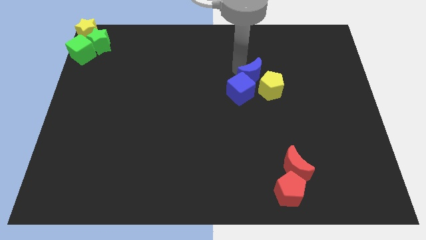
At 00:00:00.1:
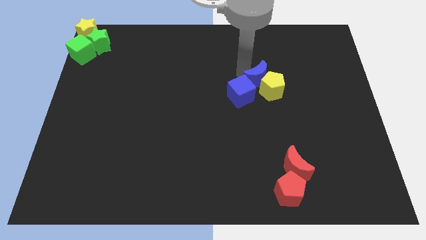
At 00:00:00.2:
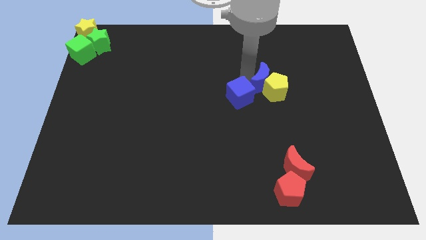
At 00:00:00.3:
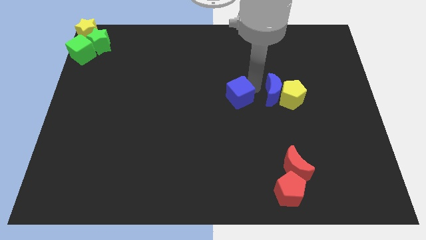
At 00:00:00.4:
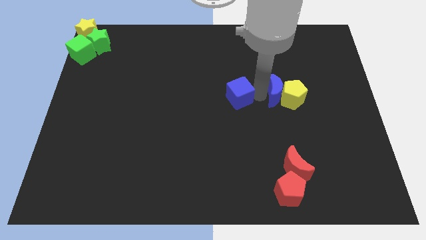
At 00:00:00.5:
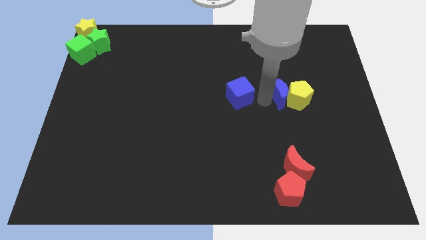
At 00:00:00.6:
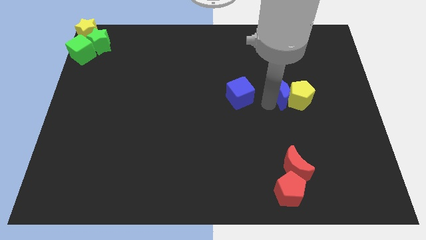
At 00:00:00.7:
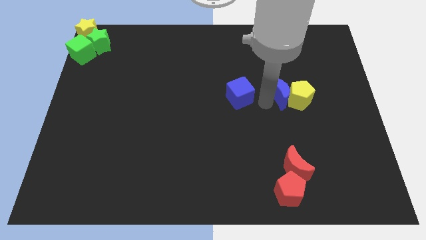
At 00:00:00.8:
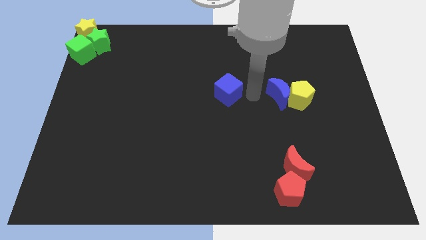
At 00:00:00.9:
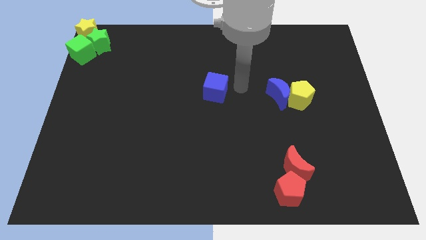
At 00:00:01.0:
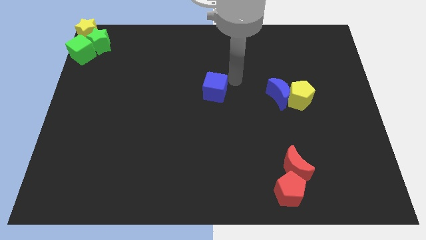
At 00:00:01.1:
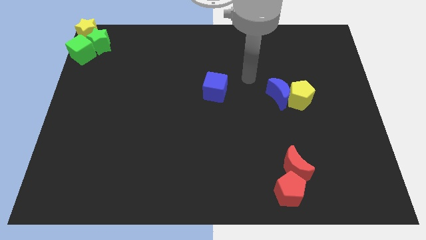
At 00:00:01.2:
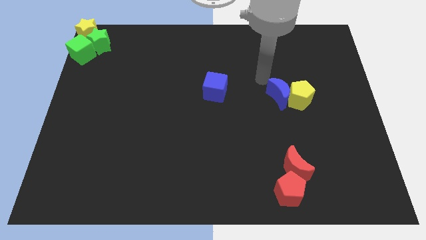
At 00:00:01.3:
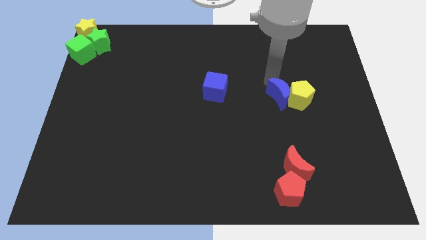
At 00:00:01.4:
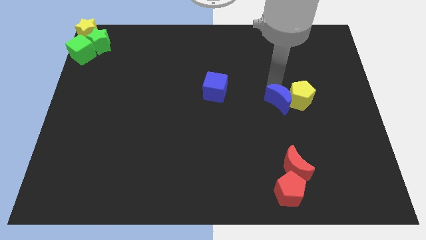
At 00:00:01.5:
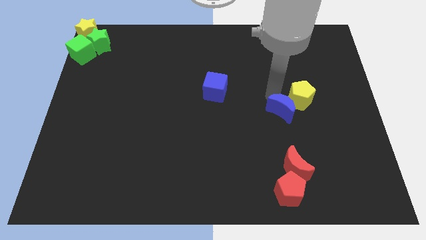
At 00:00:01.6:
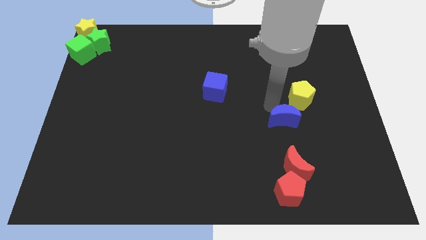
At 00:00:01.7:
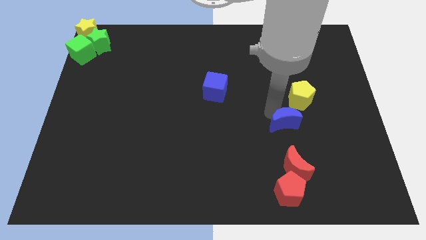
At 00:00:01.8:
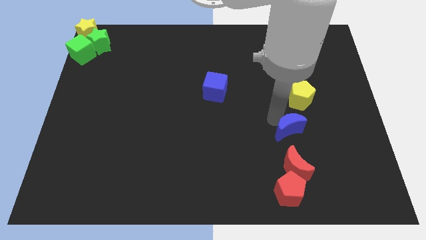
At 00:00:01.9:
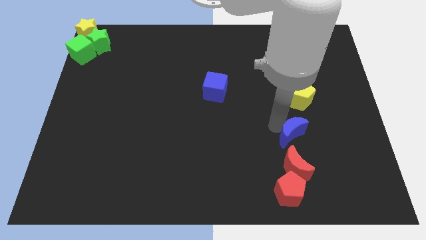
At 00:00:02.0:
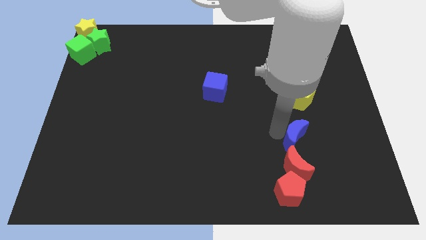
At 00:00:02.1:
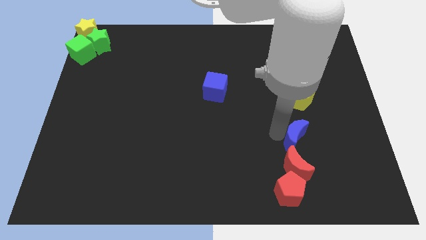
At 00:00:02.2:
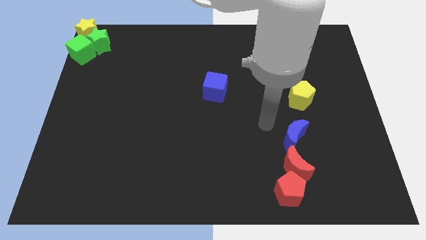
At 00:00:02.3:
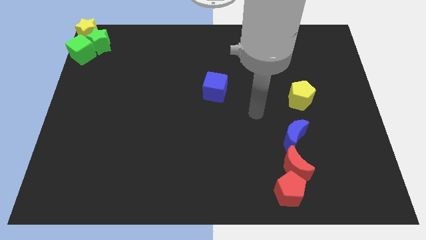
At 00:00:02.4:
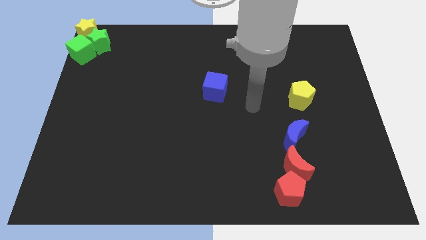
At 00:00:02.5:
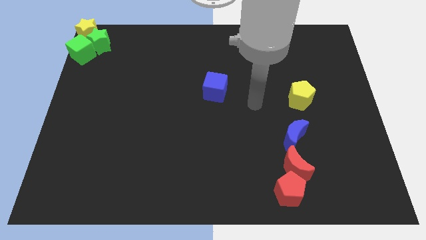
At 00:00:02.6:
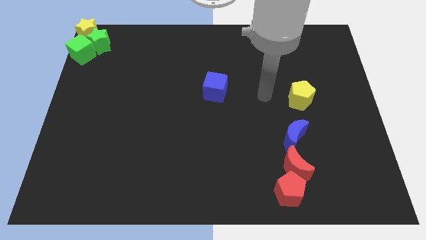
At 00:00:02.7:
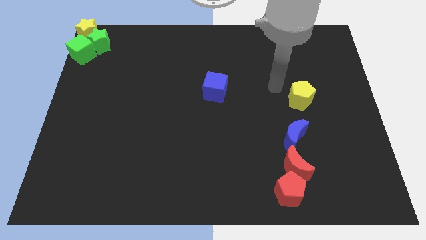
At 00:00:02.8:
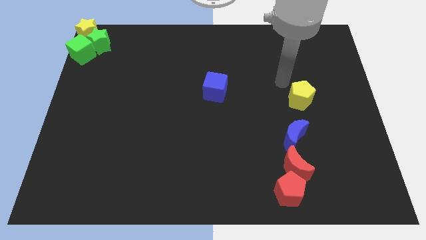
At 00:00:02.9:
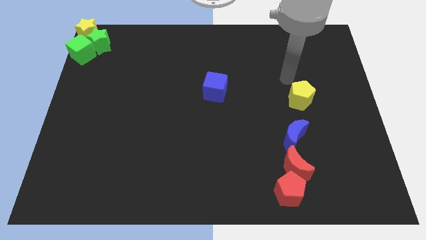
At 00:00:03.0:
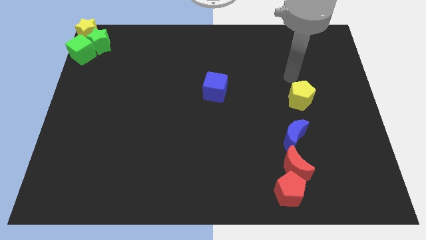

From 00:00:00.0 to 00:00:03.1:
place the blue moon beside the red moon to form a line

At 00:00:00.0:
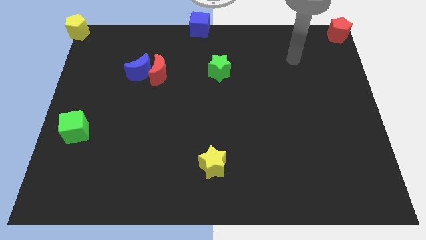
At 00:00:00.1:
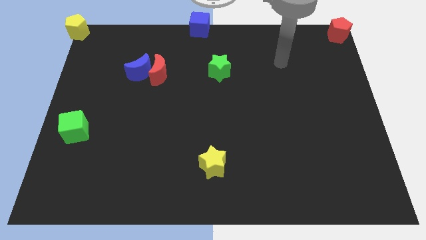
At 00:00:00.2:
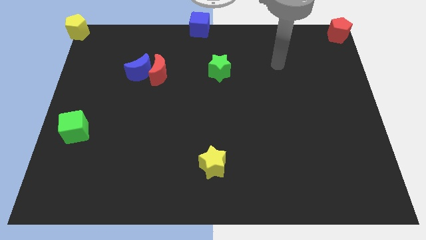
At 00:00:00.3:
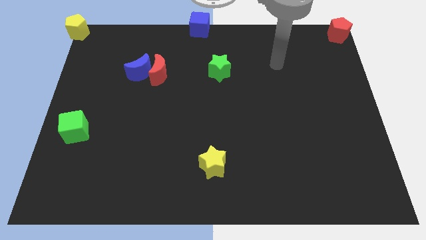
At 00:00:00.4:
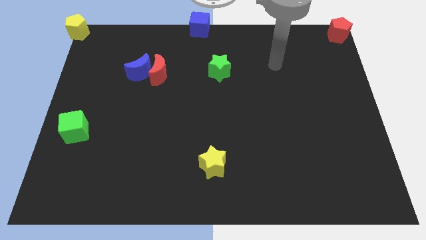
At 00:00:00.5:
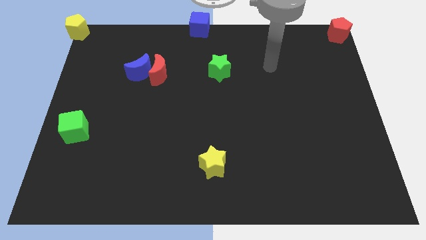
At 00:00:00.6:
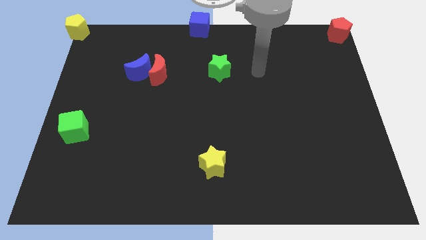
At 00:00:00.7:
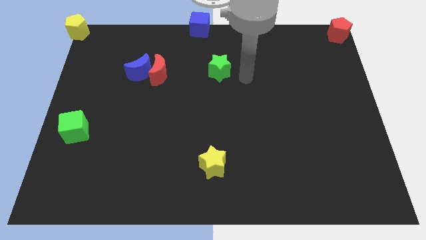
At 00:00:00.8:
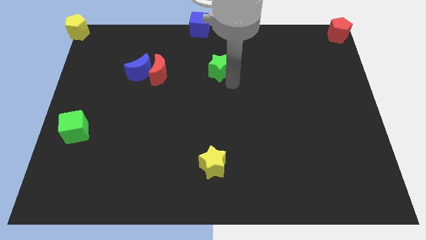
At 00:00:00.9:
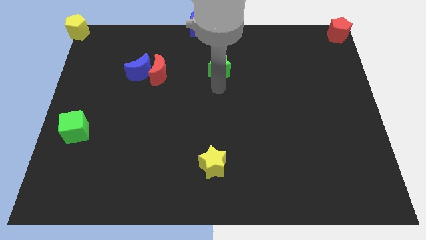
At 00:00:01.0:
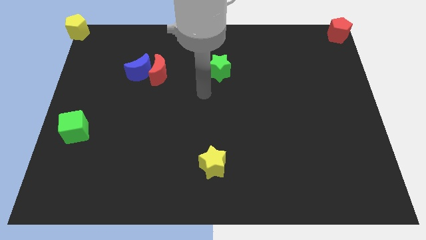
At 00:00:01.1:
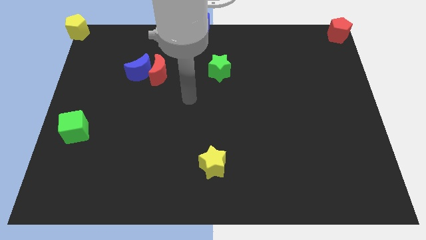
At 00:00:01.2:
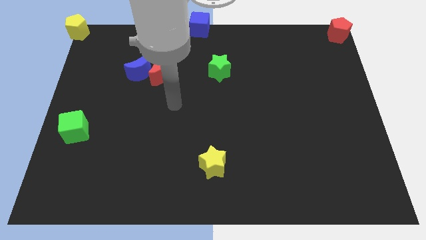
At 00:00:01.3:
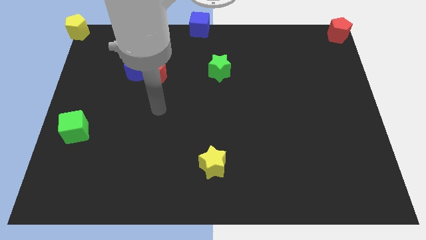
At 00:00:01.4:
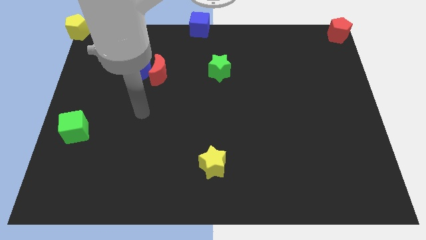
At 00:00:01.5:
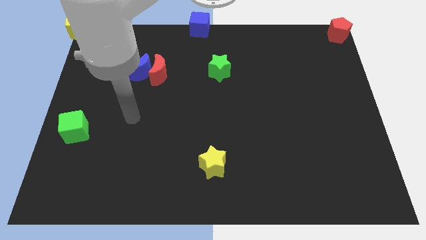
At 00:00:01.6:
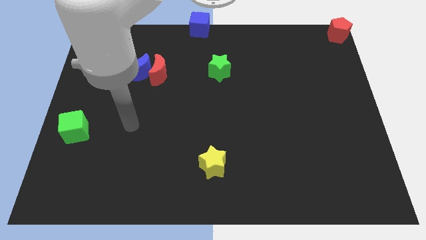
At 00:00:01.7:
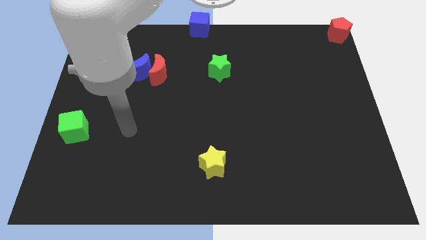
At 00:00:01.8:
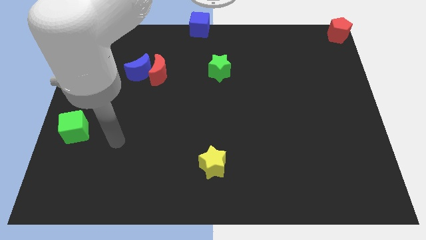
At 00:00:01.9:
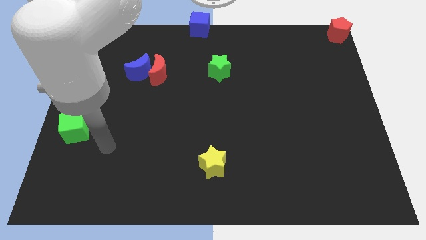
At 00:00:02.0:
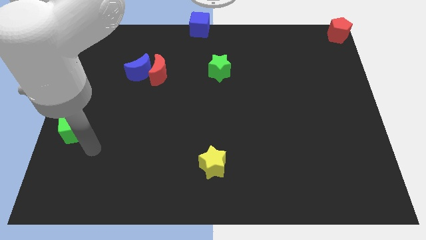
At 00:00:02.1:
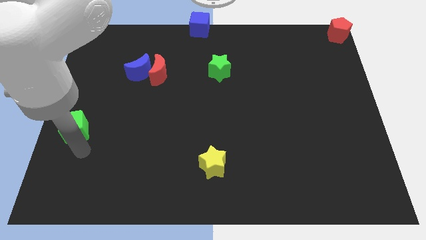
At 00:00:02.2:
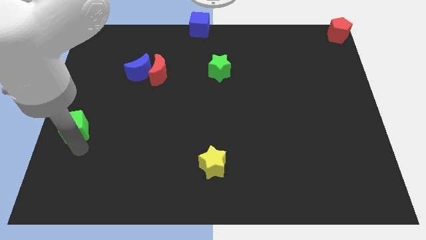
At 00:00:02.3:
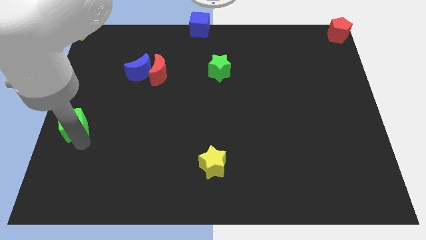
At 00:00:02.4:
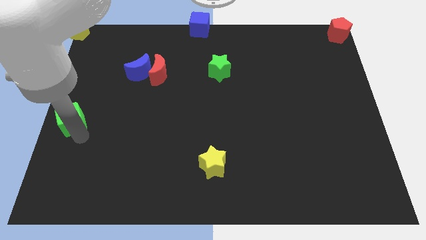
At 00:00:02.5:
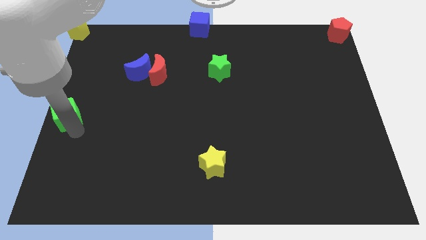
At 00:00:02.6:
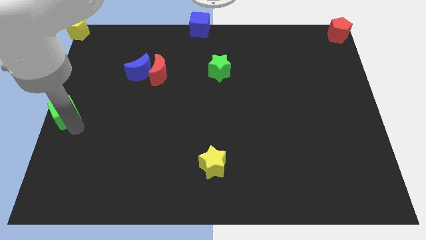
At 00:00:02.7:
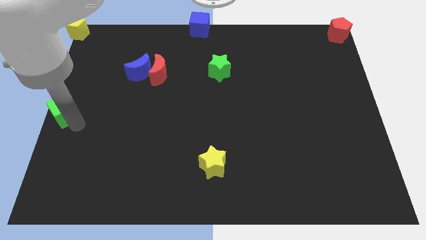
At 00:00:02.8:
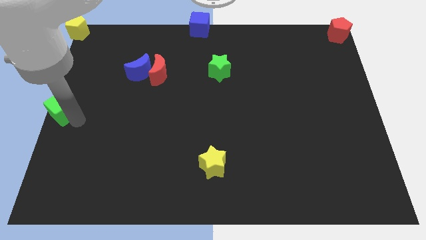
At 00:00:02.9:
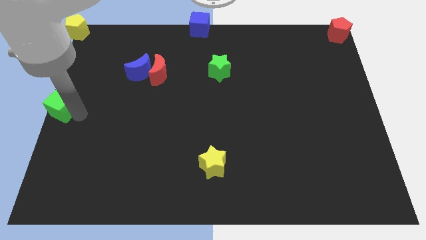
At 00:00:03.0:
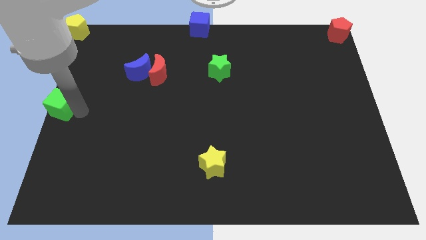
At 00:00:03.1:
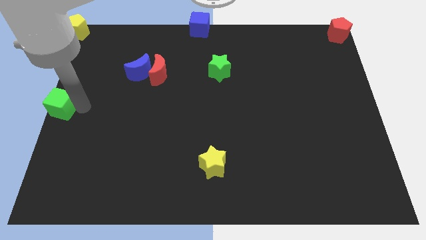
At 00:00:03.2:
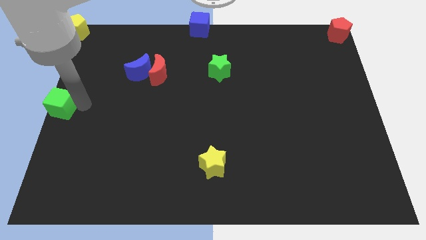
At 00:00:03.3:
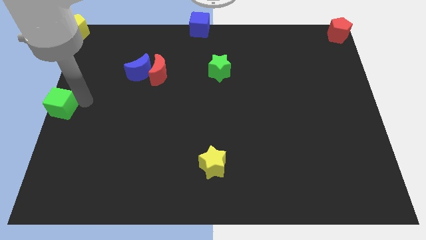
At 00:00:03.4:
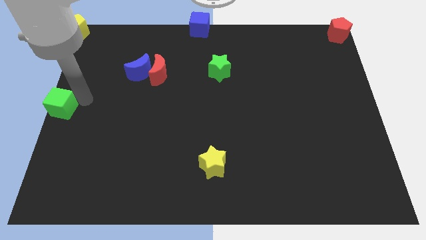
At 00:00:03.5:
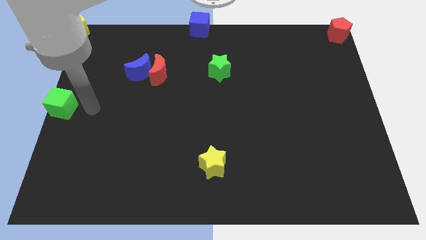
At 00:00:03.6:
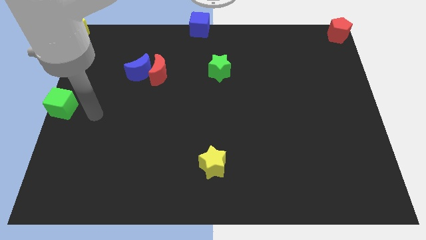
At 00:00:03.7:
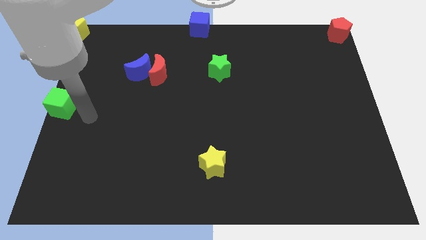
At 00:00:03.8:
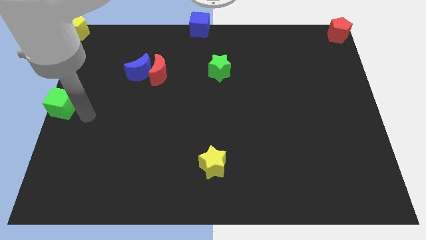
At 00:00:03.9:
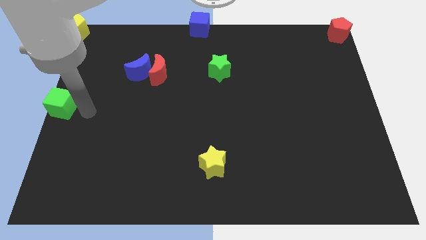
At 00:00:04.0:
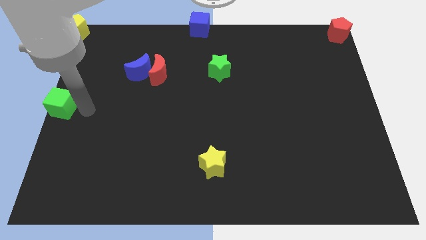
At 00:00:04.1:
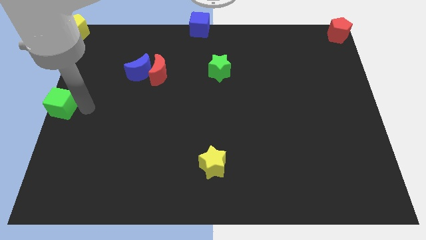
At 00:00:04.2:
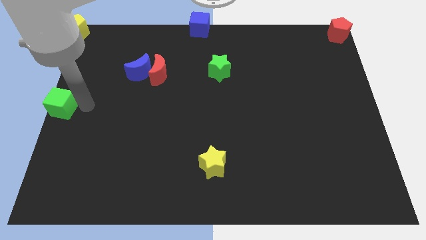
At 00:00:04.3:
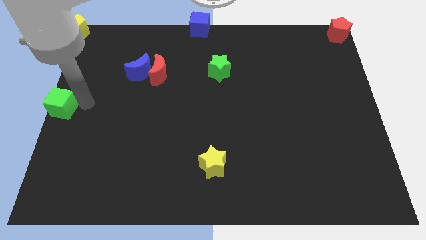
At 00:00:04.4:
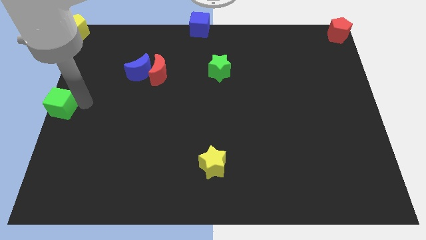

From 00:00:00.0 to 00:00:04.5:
move the green cube to the left center of the board

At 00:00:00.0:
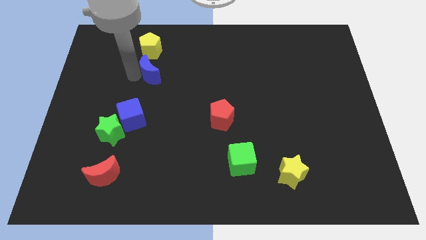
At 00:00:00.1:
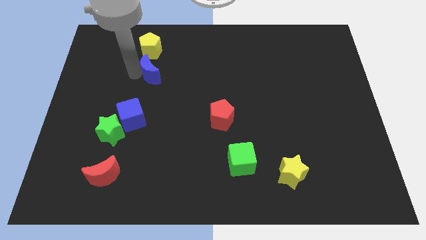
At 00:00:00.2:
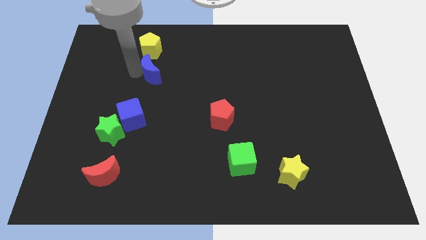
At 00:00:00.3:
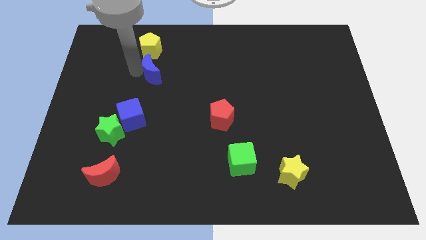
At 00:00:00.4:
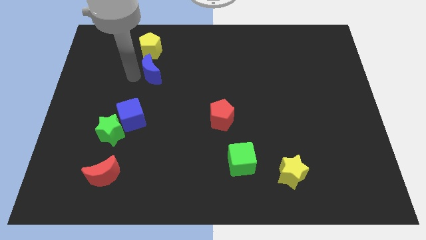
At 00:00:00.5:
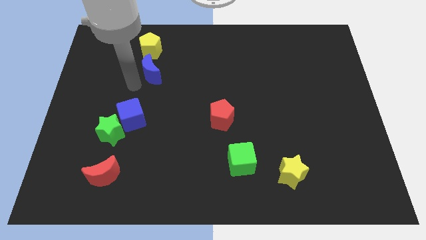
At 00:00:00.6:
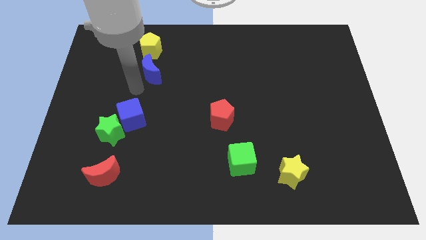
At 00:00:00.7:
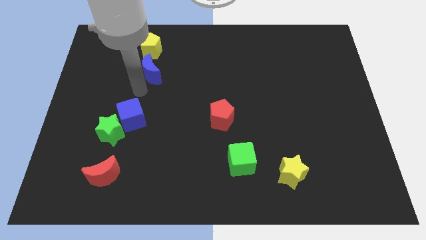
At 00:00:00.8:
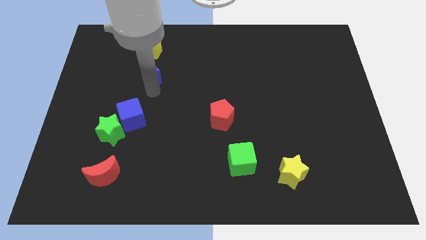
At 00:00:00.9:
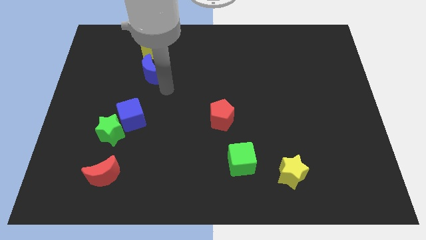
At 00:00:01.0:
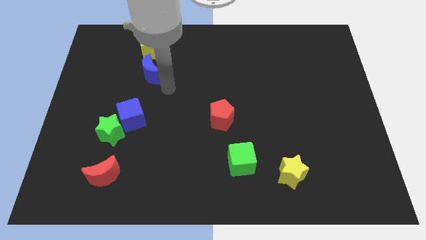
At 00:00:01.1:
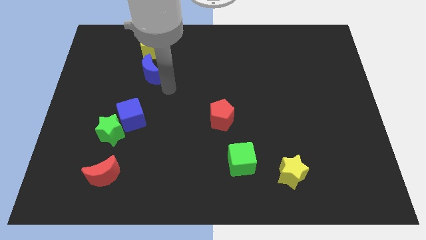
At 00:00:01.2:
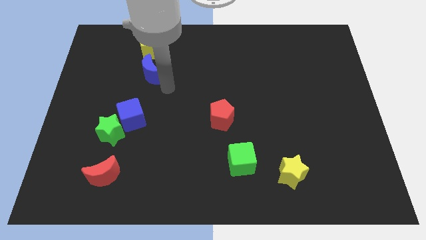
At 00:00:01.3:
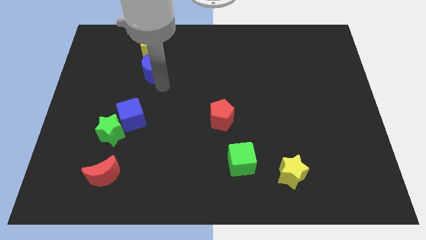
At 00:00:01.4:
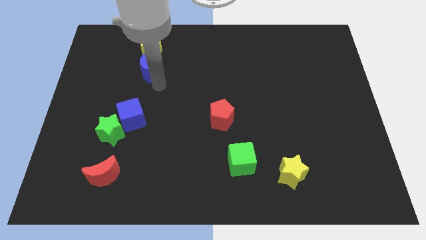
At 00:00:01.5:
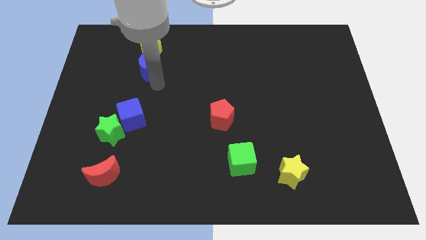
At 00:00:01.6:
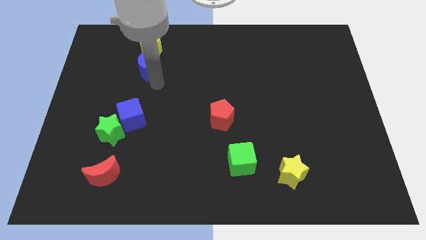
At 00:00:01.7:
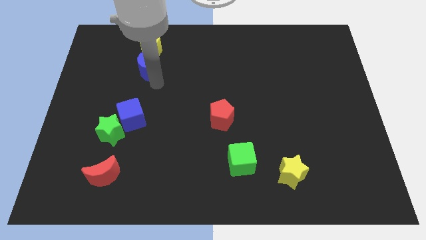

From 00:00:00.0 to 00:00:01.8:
slightly push the blue crescent
